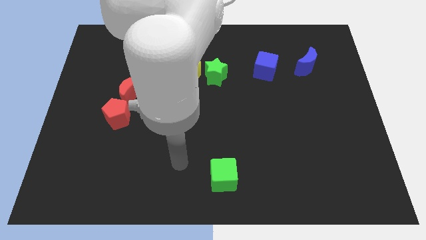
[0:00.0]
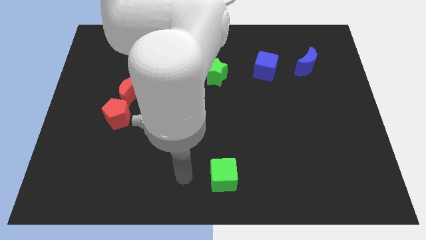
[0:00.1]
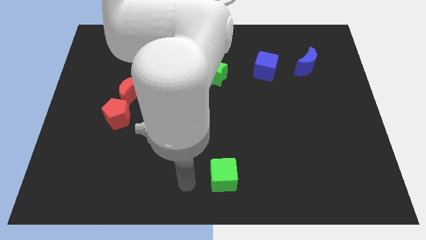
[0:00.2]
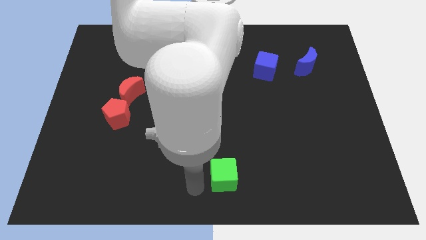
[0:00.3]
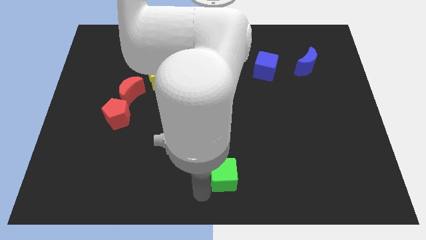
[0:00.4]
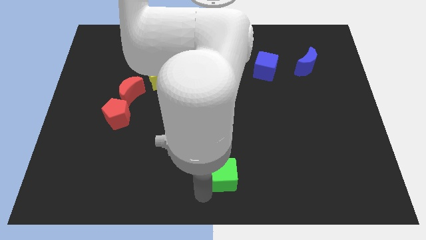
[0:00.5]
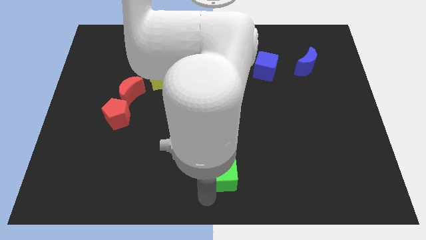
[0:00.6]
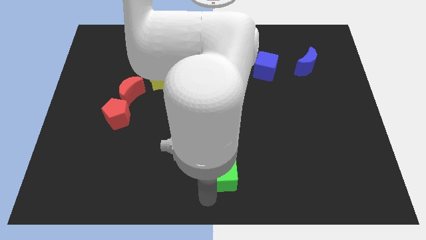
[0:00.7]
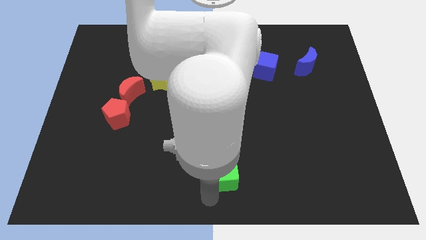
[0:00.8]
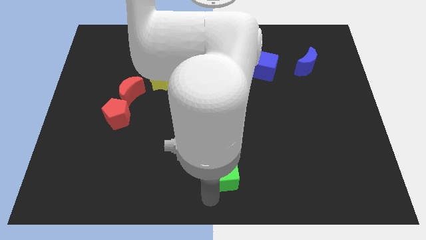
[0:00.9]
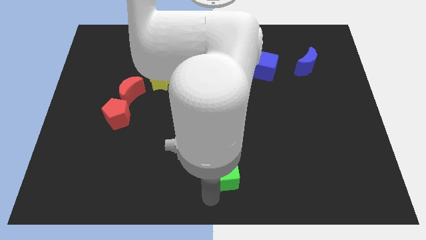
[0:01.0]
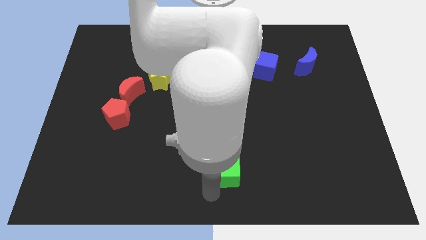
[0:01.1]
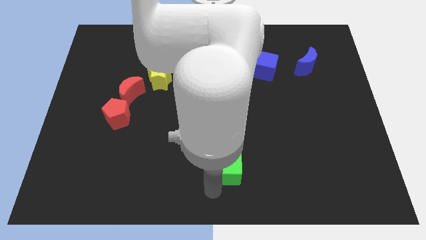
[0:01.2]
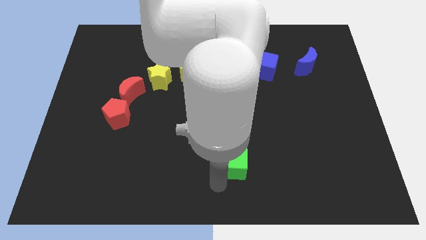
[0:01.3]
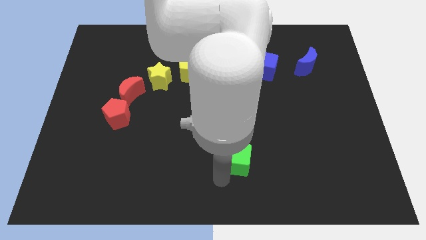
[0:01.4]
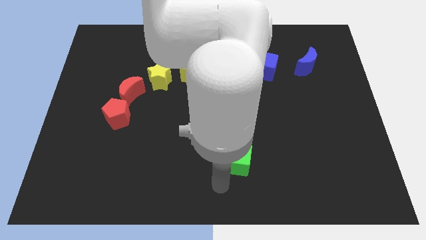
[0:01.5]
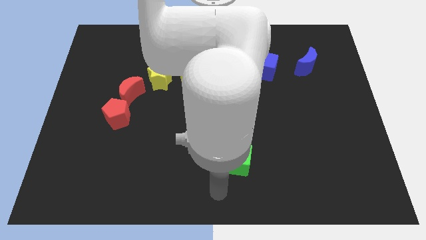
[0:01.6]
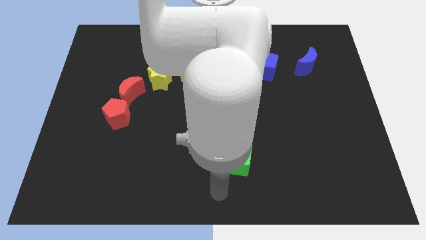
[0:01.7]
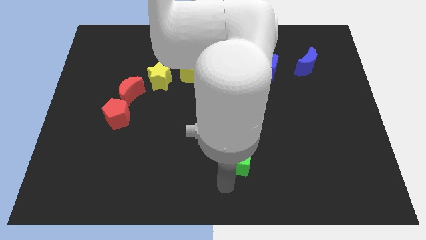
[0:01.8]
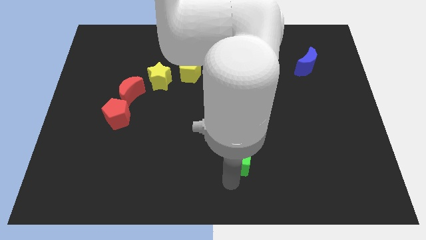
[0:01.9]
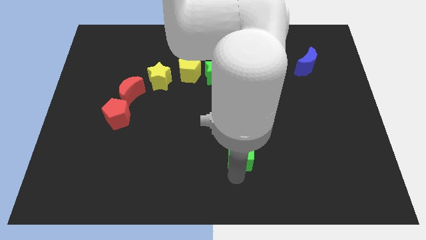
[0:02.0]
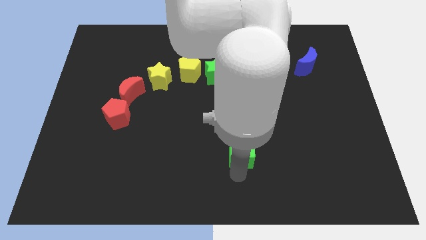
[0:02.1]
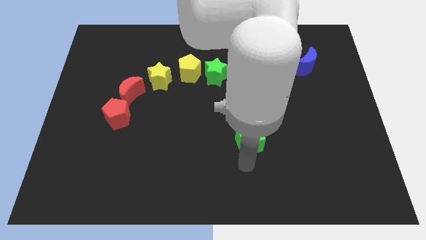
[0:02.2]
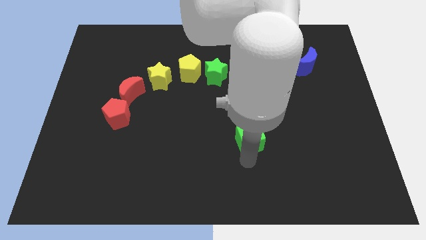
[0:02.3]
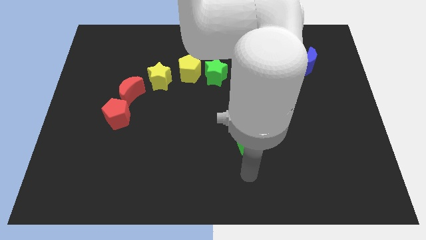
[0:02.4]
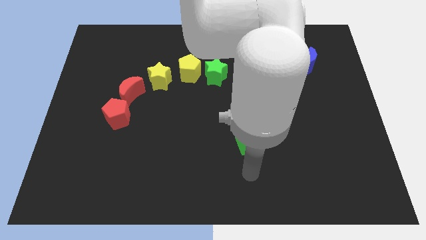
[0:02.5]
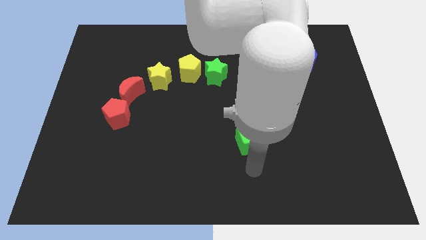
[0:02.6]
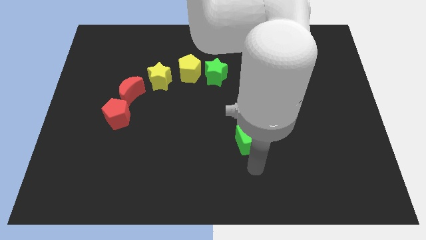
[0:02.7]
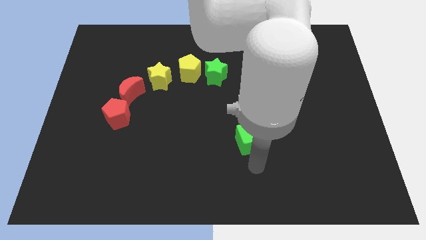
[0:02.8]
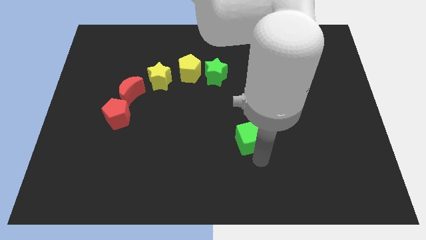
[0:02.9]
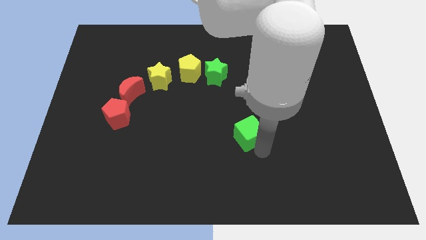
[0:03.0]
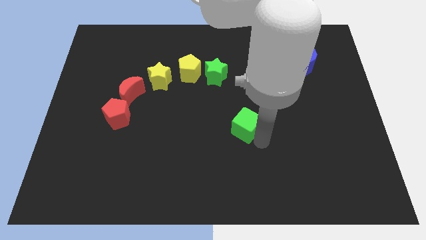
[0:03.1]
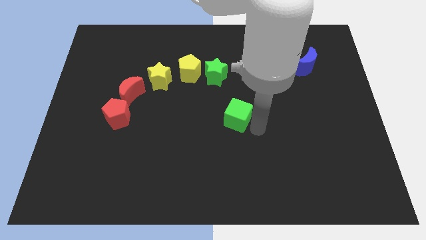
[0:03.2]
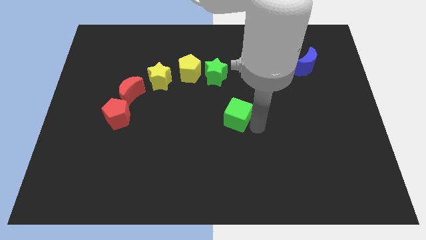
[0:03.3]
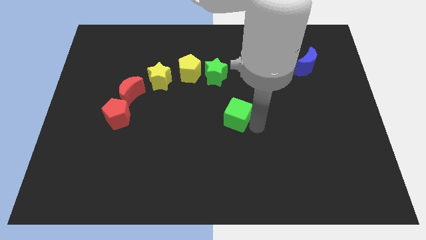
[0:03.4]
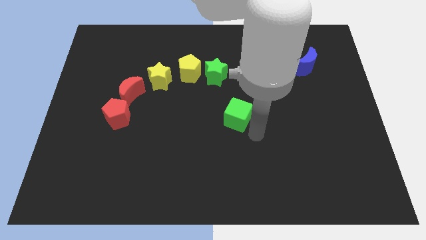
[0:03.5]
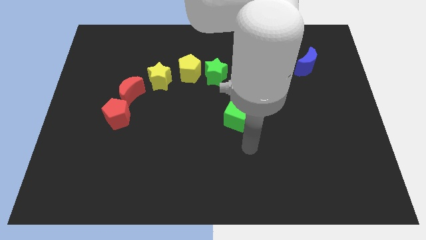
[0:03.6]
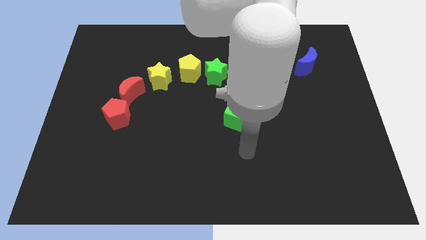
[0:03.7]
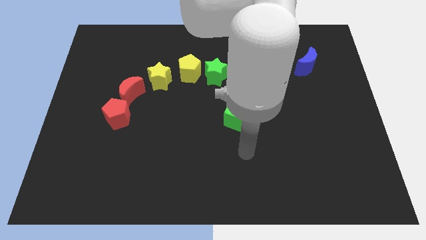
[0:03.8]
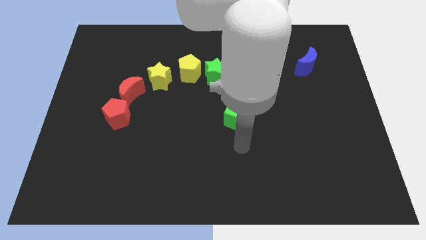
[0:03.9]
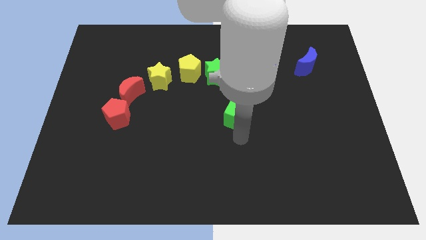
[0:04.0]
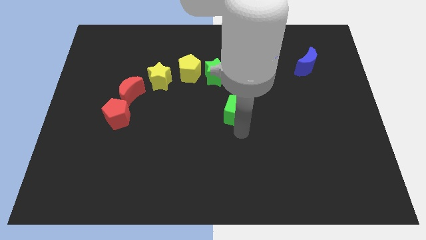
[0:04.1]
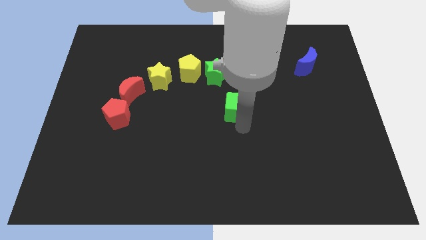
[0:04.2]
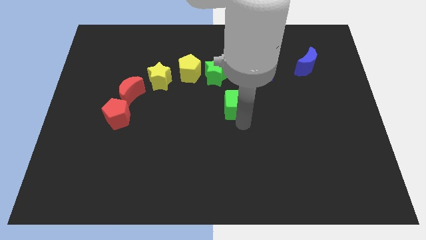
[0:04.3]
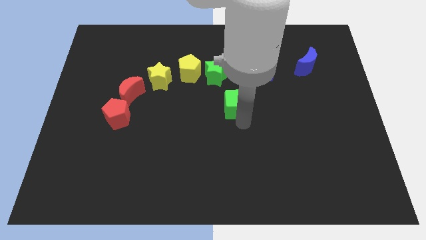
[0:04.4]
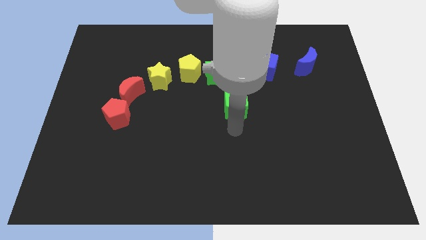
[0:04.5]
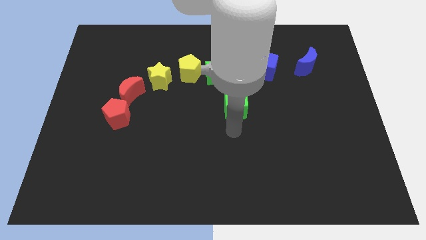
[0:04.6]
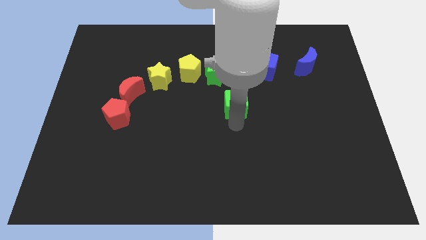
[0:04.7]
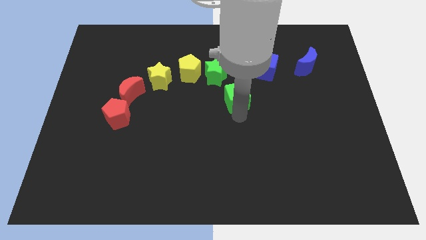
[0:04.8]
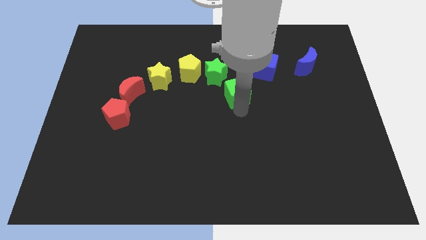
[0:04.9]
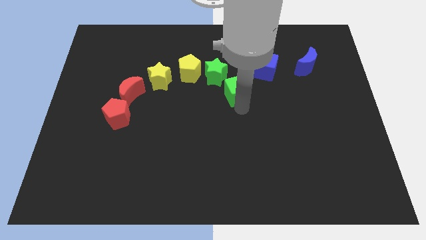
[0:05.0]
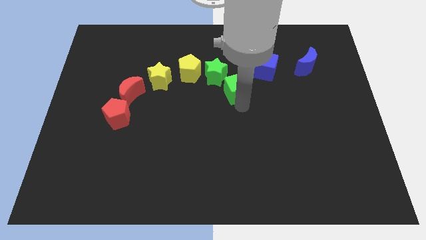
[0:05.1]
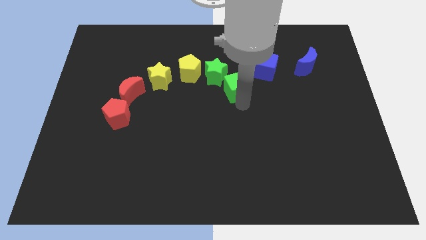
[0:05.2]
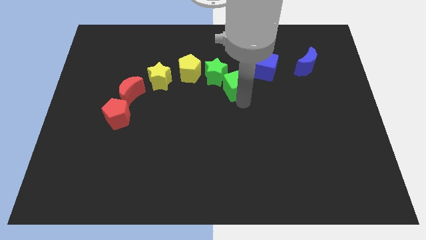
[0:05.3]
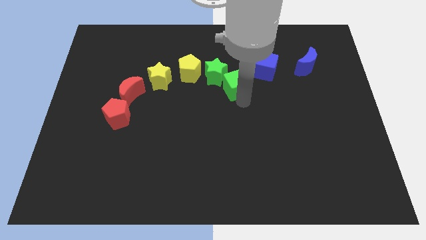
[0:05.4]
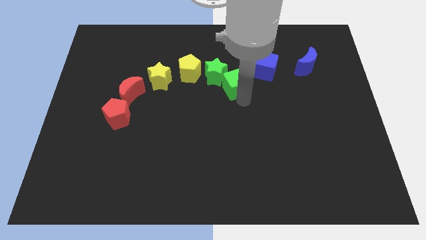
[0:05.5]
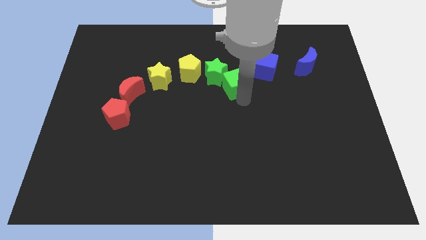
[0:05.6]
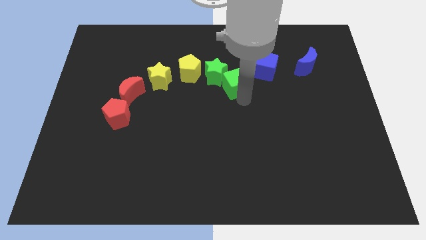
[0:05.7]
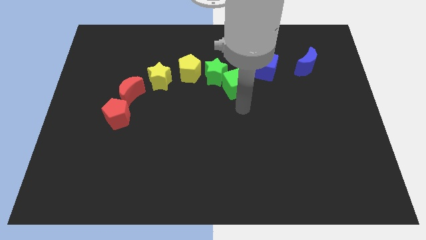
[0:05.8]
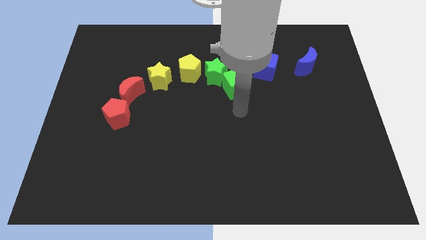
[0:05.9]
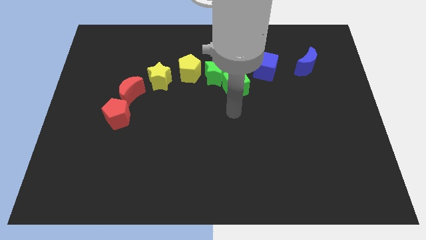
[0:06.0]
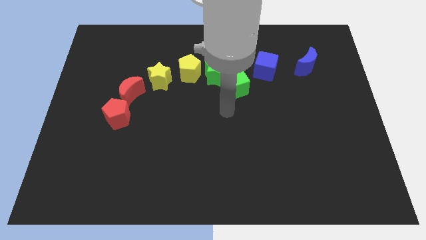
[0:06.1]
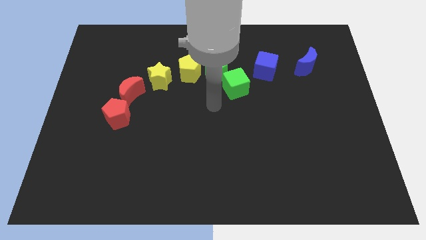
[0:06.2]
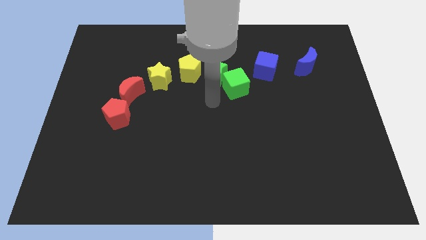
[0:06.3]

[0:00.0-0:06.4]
drag the green cube to the bottom left side of the blue cube

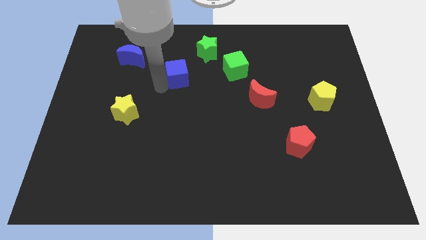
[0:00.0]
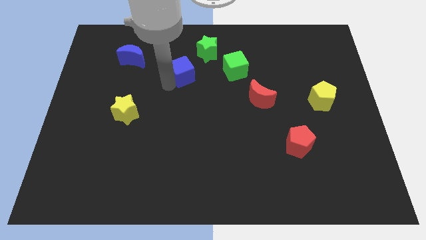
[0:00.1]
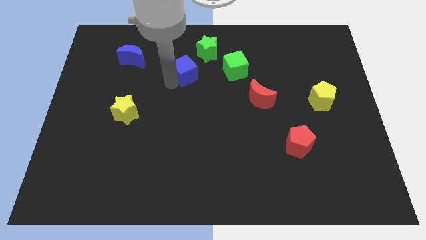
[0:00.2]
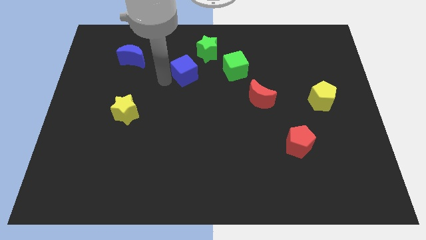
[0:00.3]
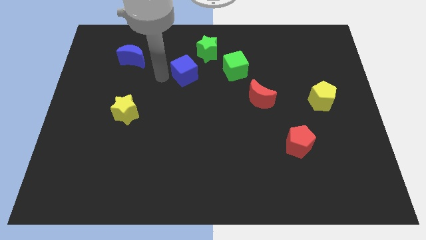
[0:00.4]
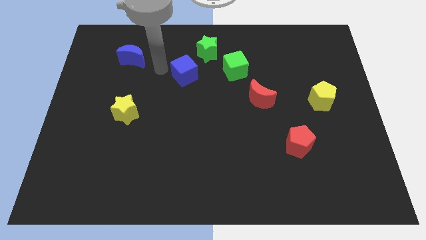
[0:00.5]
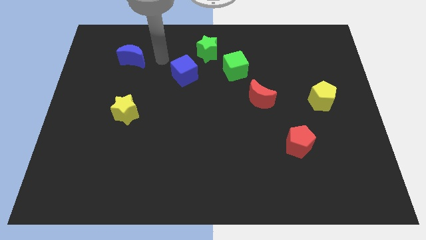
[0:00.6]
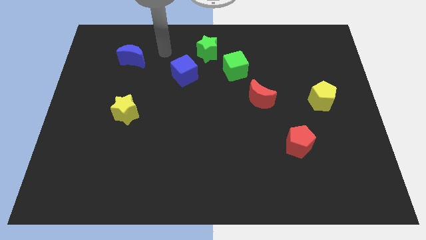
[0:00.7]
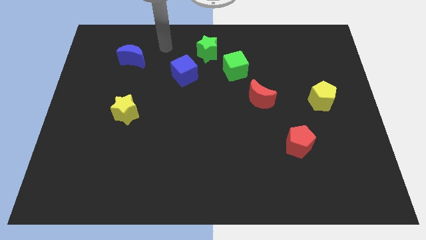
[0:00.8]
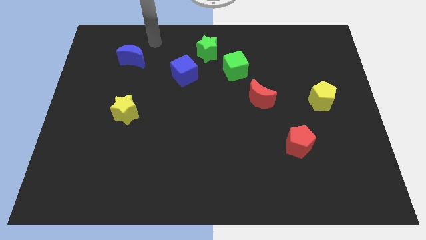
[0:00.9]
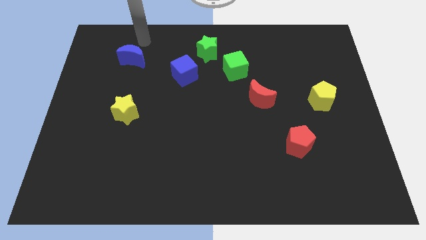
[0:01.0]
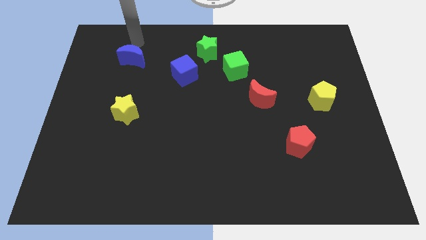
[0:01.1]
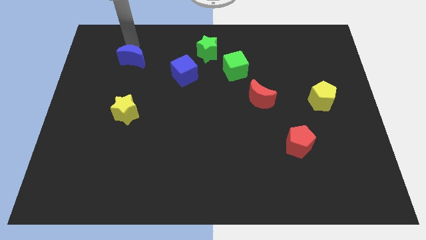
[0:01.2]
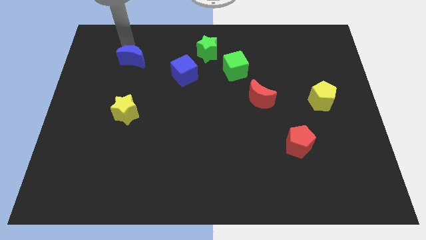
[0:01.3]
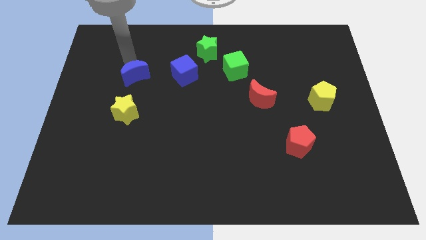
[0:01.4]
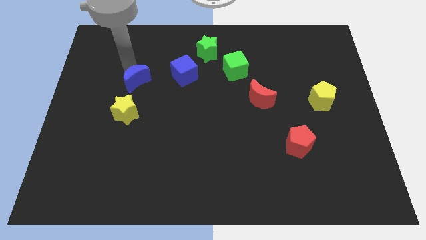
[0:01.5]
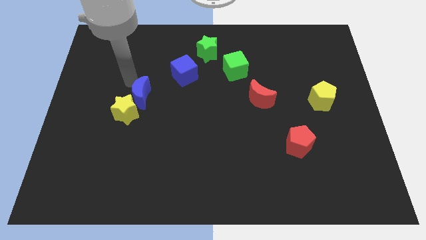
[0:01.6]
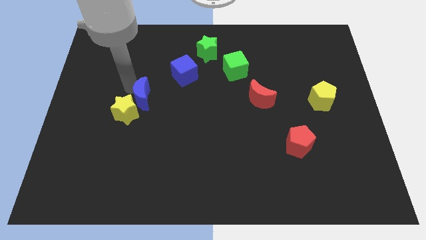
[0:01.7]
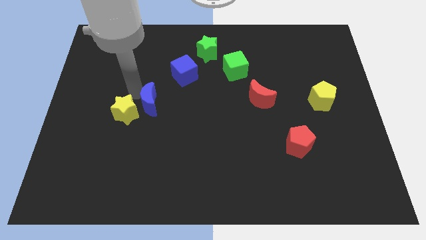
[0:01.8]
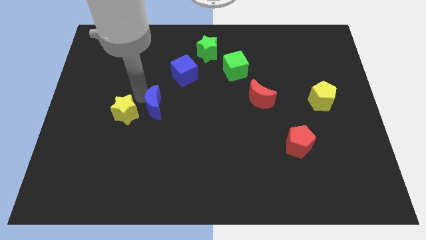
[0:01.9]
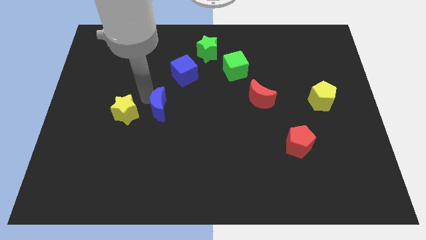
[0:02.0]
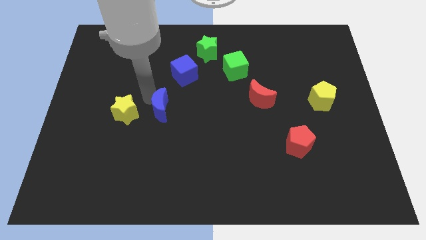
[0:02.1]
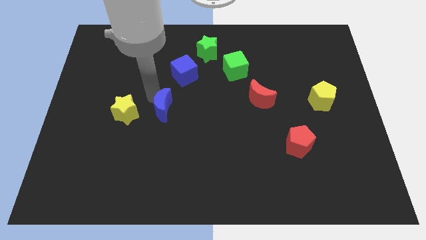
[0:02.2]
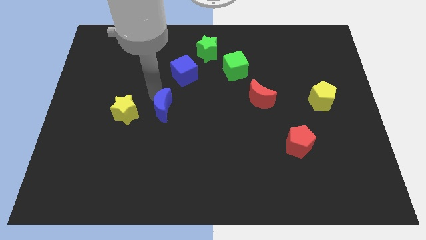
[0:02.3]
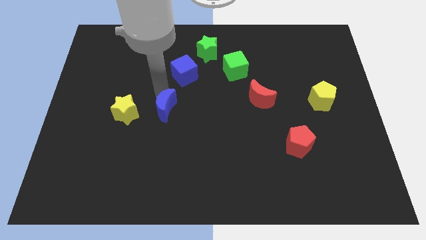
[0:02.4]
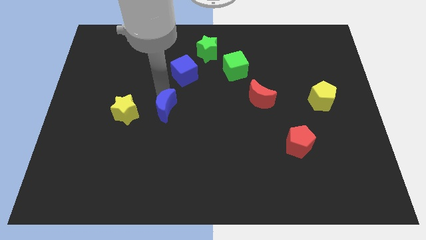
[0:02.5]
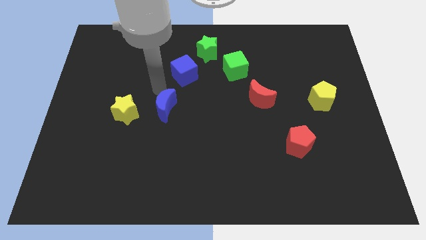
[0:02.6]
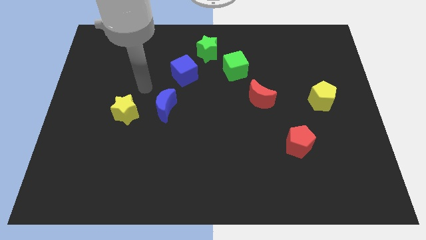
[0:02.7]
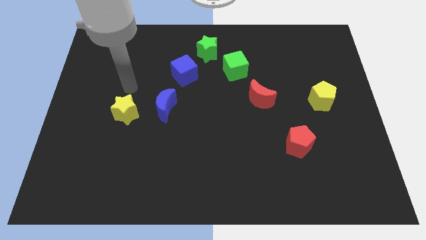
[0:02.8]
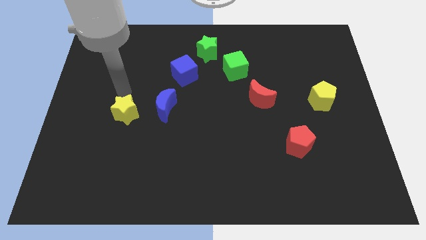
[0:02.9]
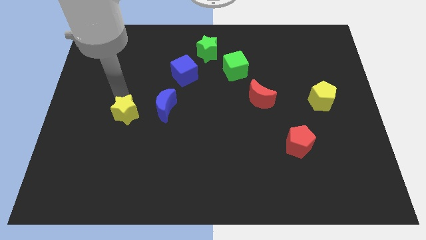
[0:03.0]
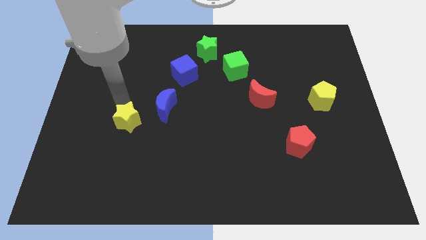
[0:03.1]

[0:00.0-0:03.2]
move blue crescent towards center of the board
